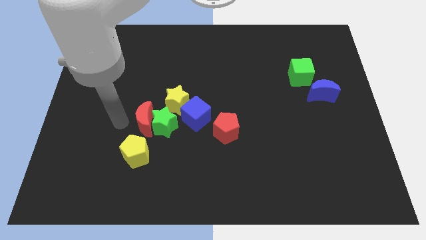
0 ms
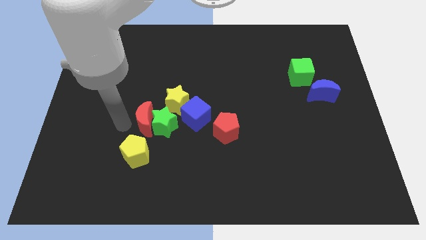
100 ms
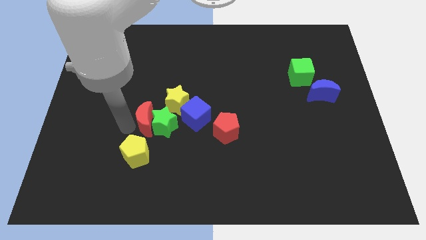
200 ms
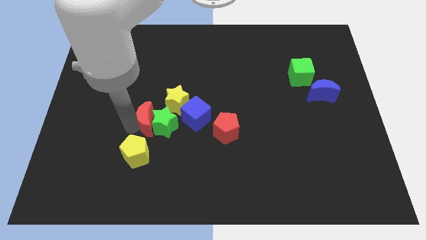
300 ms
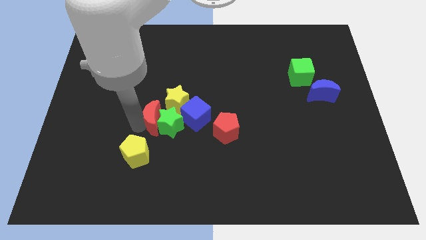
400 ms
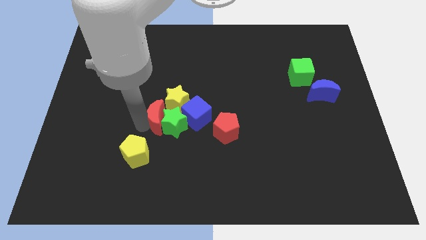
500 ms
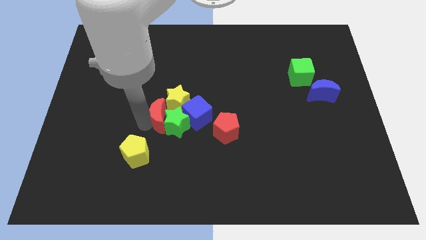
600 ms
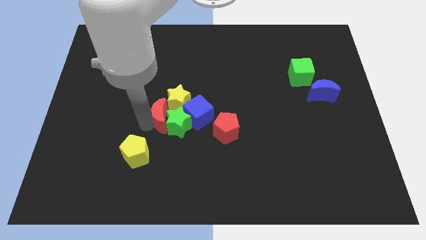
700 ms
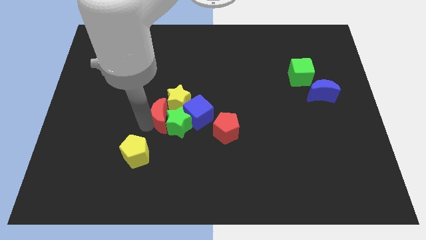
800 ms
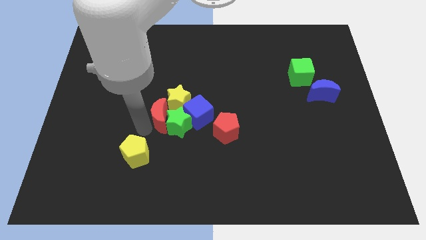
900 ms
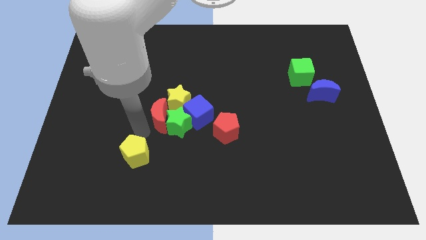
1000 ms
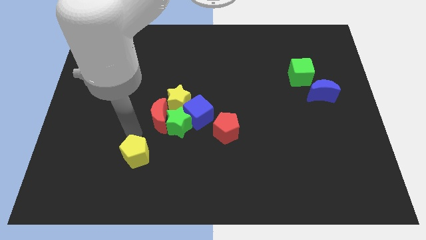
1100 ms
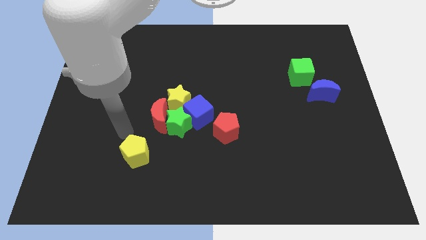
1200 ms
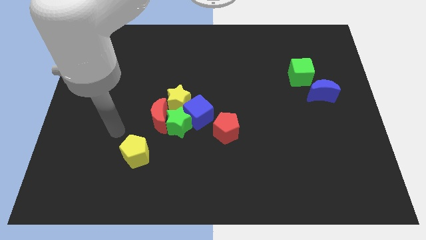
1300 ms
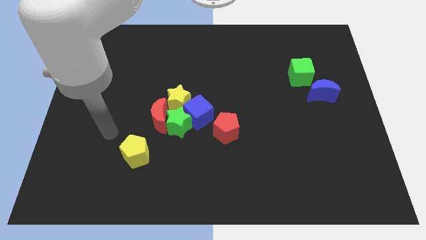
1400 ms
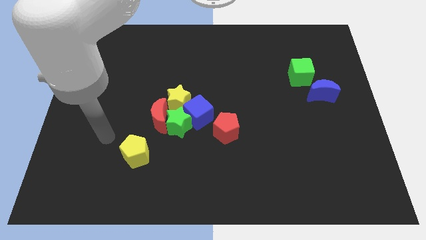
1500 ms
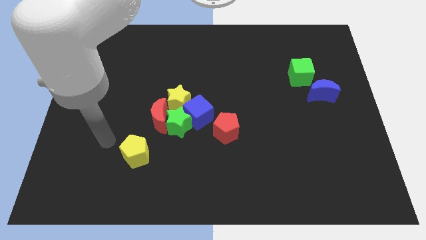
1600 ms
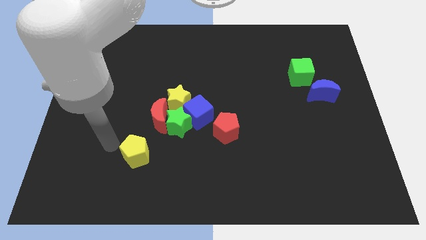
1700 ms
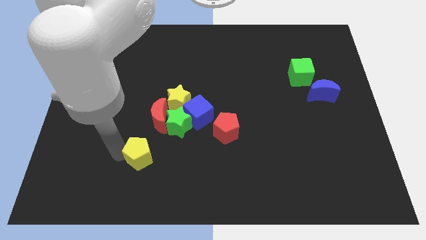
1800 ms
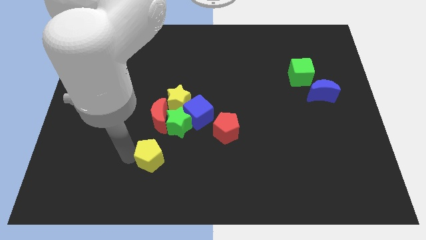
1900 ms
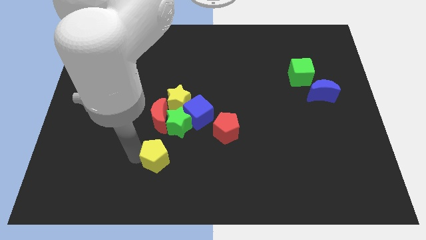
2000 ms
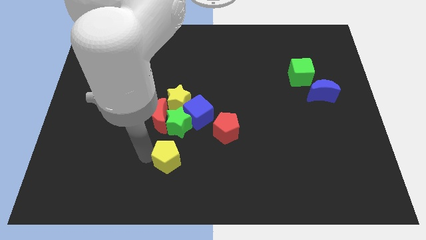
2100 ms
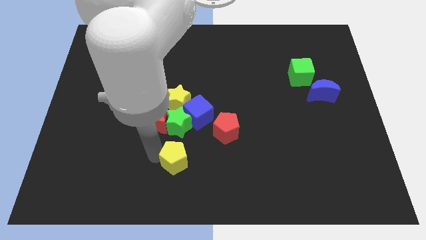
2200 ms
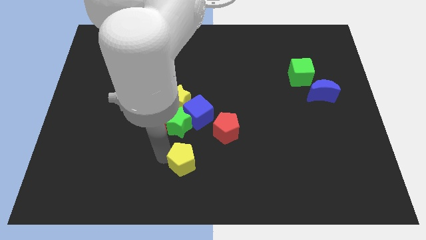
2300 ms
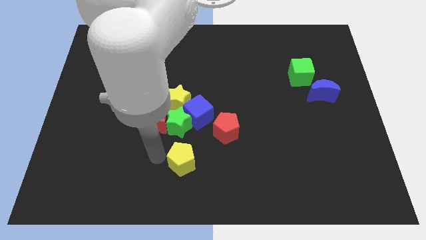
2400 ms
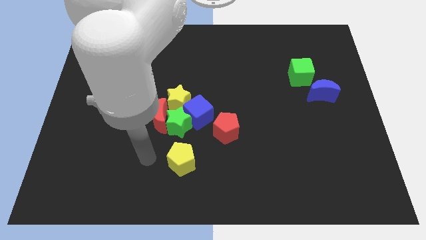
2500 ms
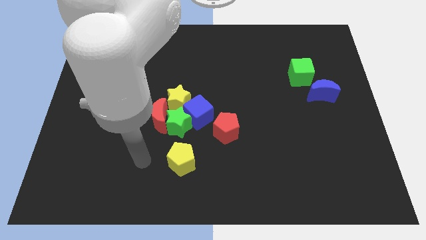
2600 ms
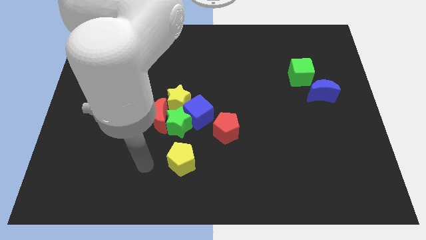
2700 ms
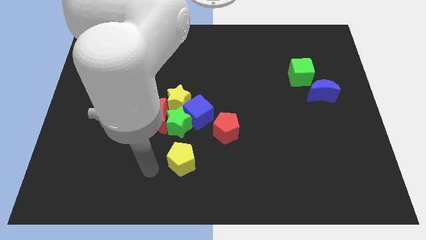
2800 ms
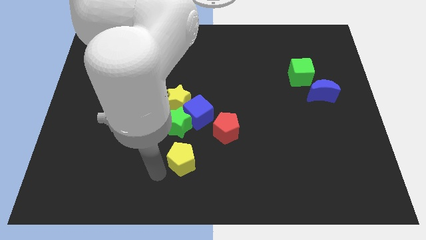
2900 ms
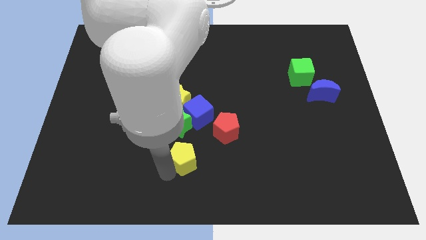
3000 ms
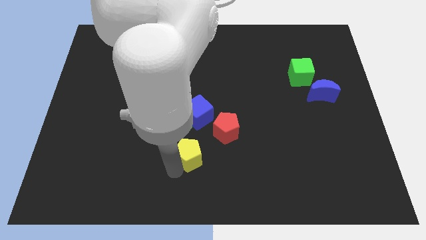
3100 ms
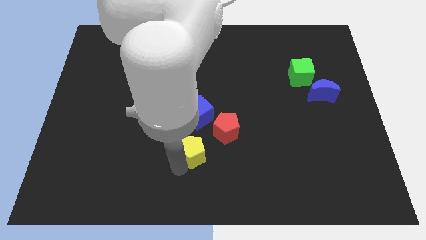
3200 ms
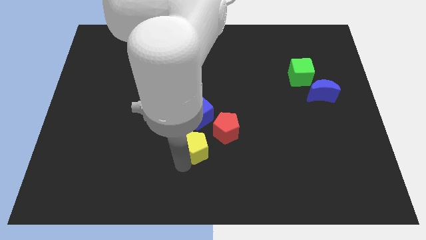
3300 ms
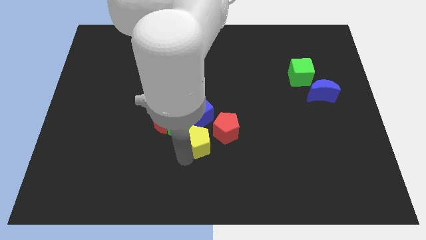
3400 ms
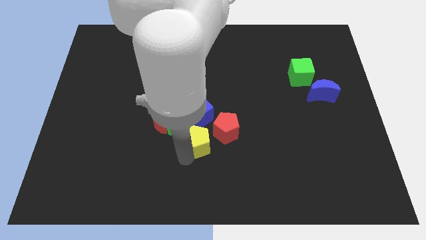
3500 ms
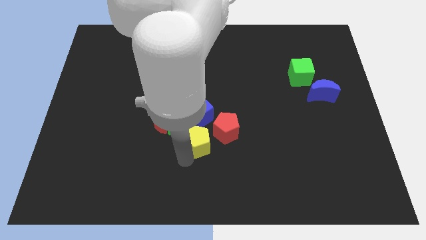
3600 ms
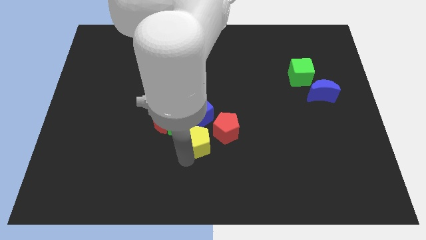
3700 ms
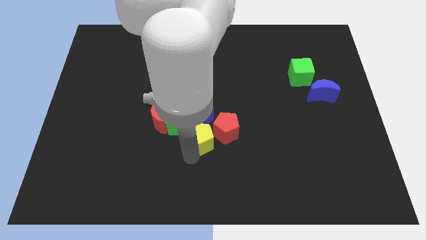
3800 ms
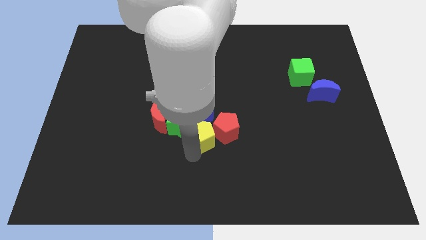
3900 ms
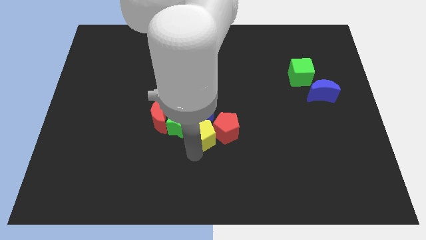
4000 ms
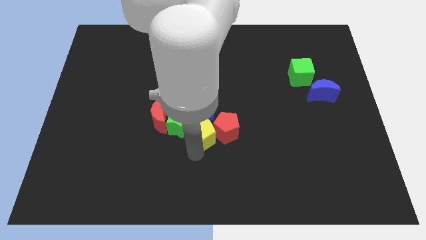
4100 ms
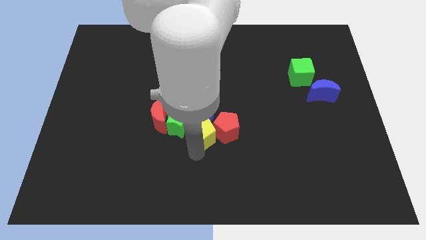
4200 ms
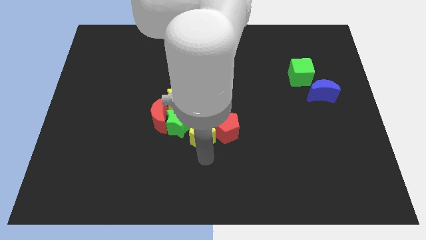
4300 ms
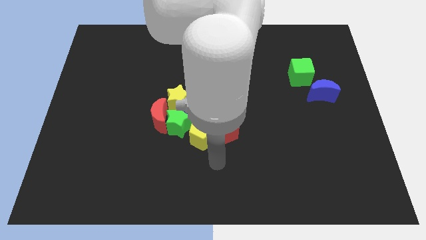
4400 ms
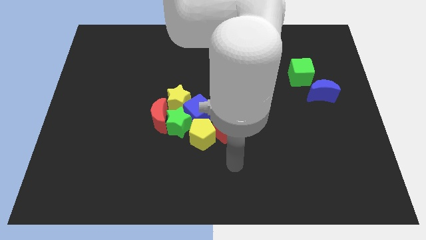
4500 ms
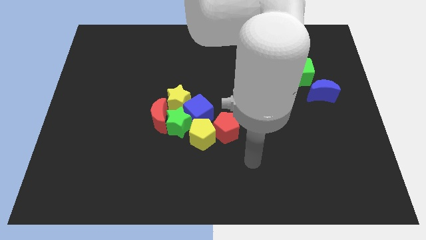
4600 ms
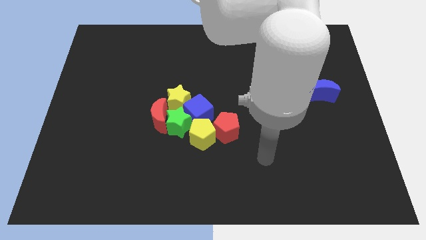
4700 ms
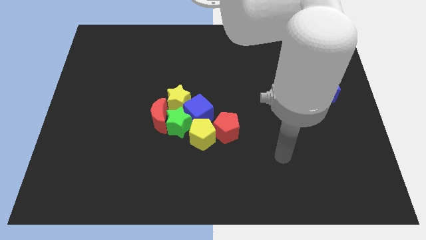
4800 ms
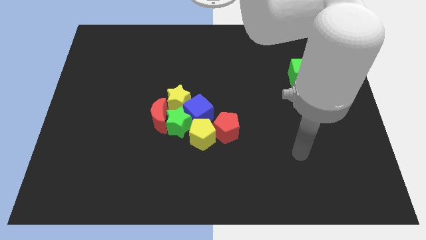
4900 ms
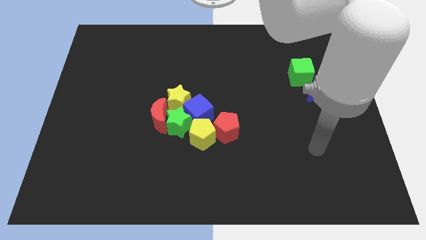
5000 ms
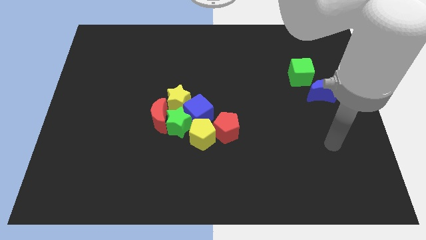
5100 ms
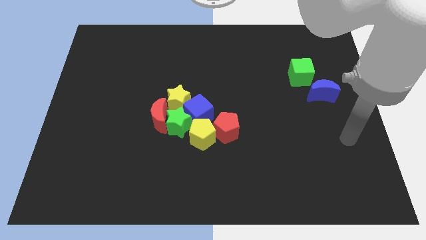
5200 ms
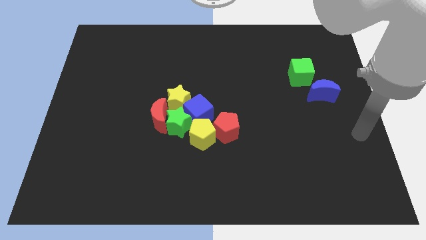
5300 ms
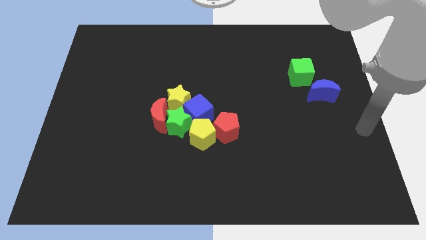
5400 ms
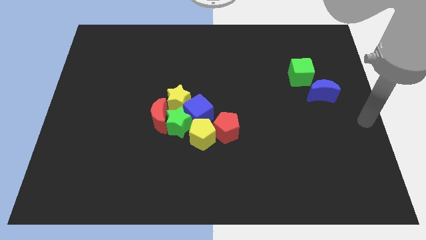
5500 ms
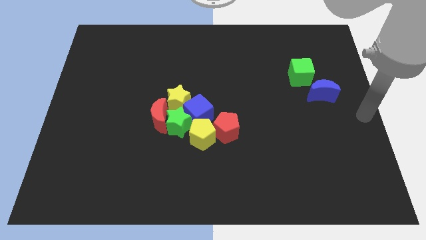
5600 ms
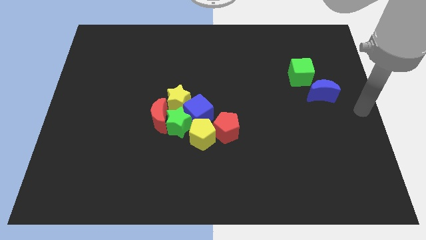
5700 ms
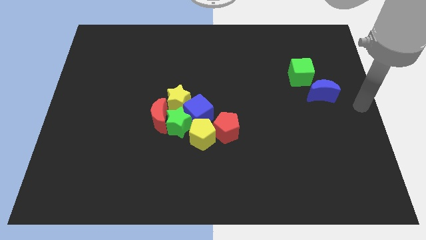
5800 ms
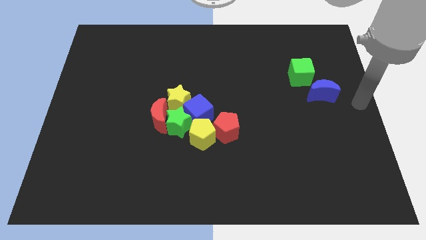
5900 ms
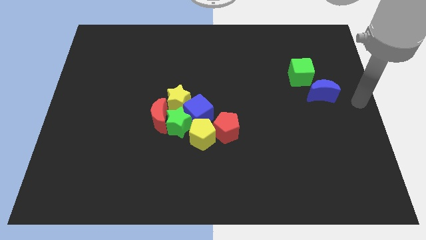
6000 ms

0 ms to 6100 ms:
move the yellow pentagon to the group of blocks

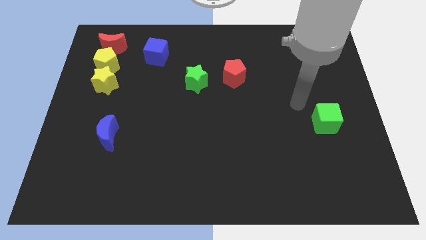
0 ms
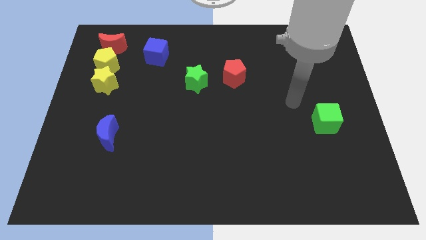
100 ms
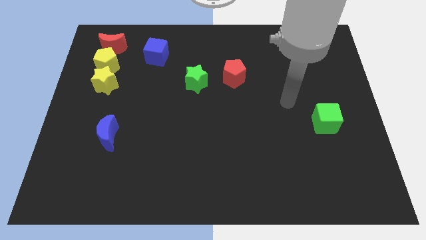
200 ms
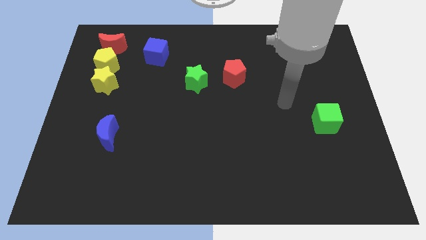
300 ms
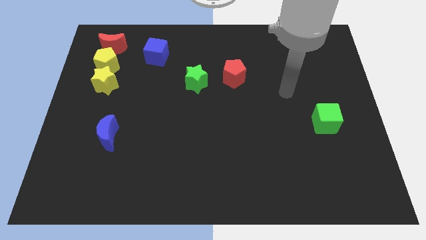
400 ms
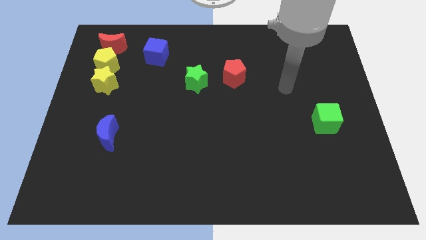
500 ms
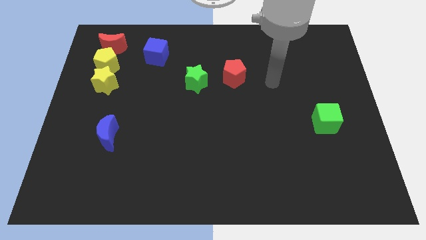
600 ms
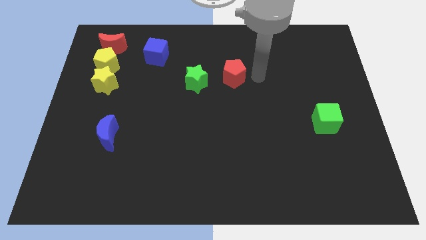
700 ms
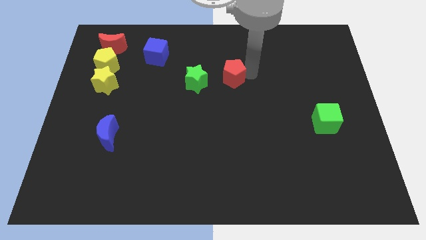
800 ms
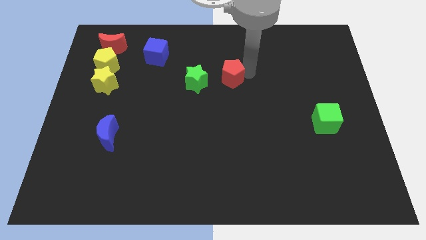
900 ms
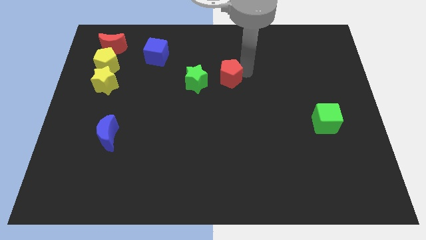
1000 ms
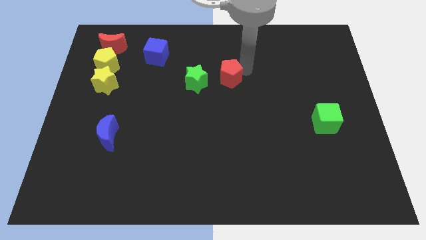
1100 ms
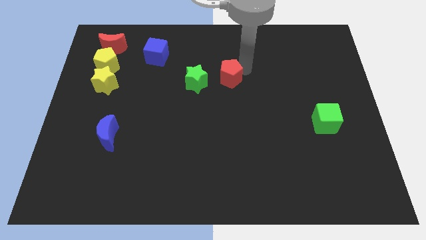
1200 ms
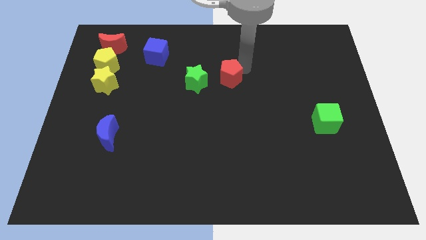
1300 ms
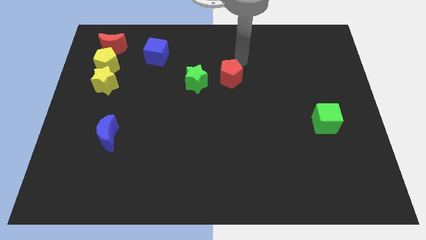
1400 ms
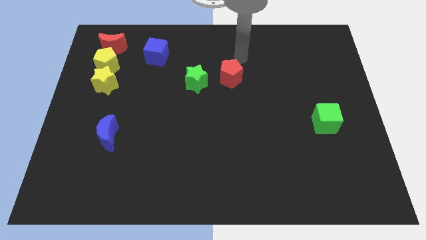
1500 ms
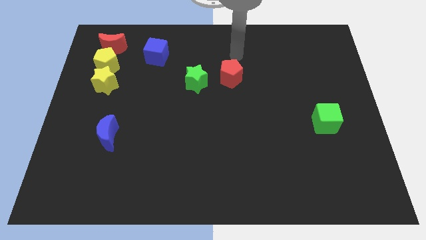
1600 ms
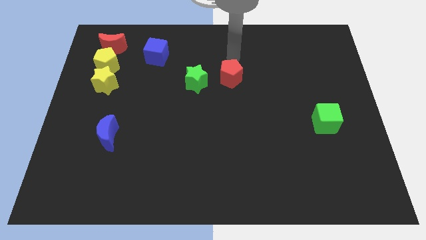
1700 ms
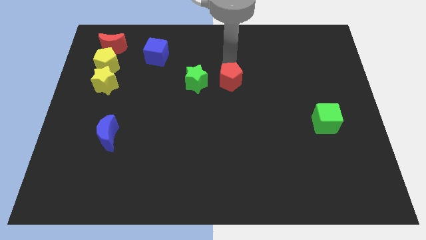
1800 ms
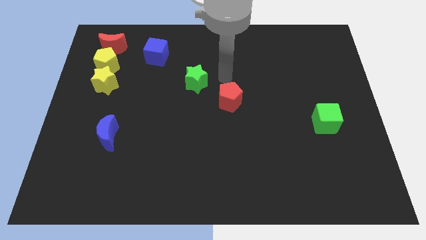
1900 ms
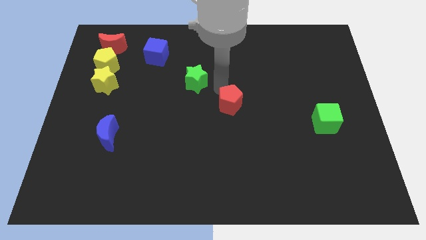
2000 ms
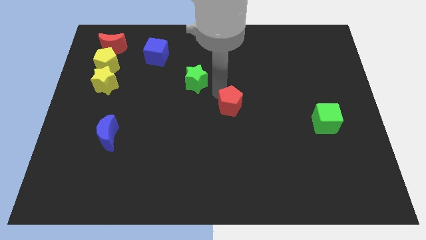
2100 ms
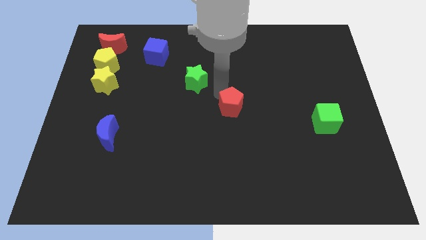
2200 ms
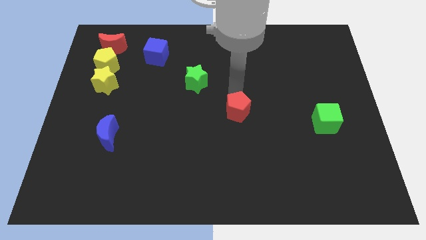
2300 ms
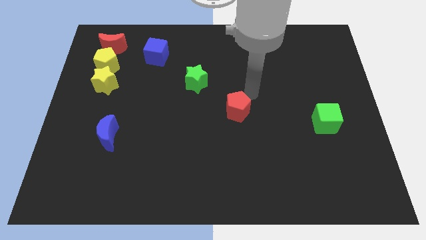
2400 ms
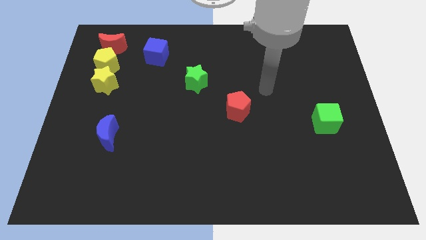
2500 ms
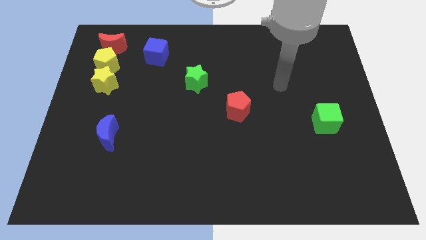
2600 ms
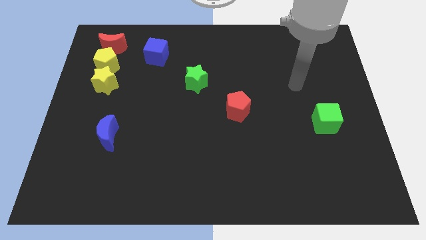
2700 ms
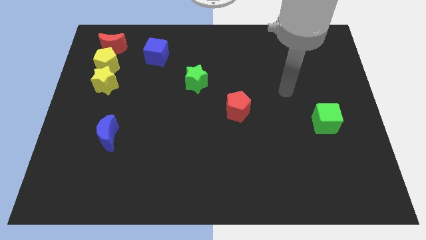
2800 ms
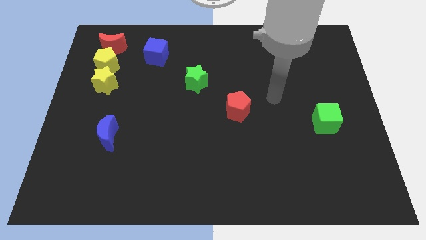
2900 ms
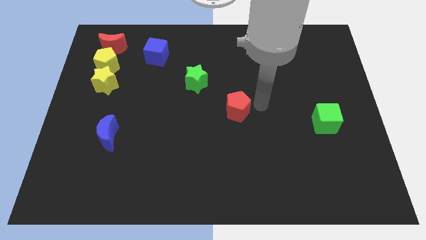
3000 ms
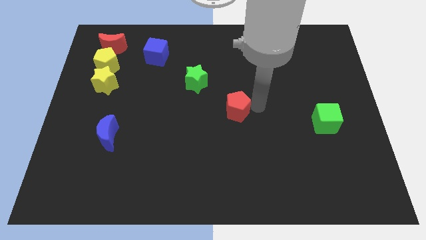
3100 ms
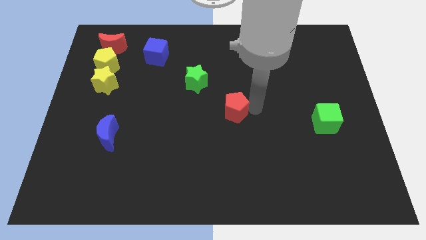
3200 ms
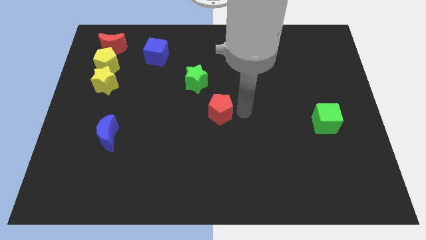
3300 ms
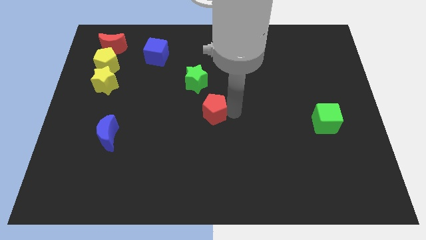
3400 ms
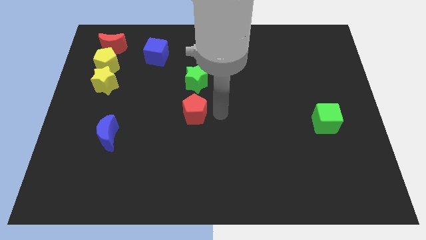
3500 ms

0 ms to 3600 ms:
move the red pentagon below the green star
